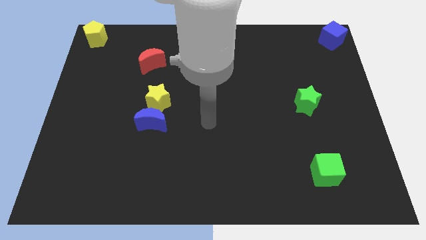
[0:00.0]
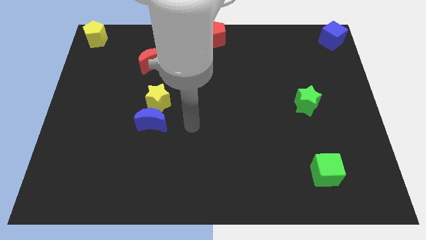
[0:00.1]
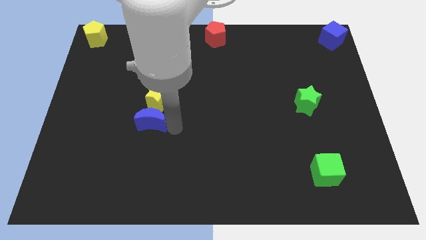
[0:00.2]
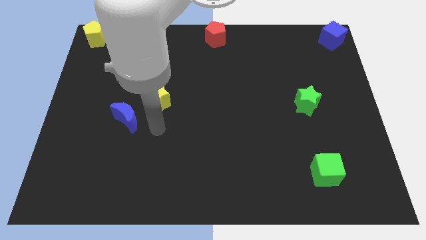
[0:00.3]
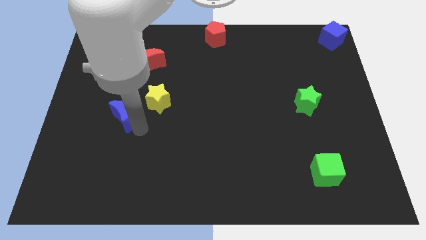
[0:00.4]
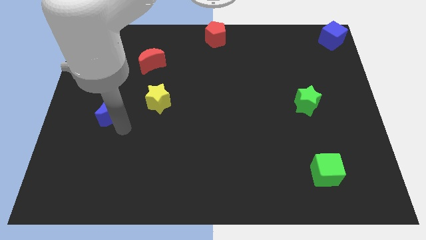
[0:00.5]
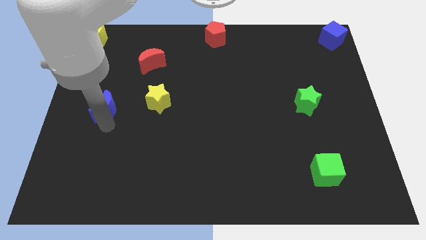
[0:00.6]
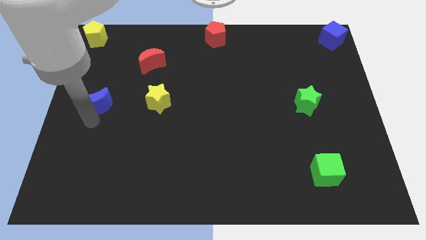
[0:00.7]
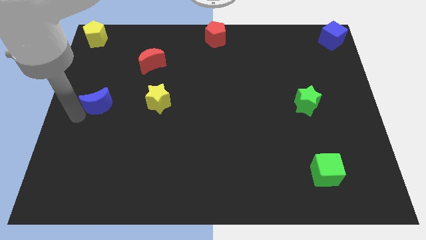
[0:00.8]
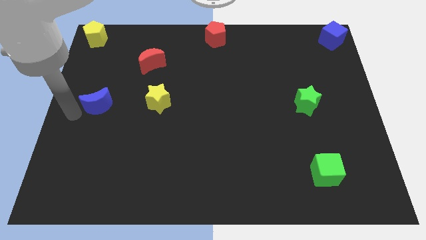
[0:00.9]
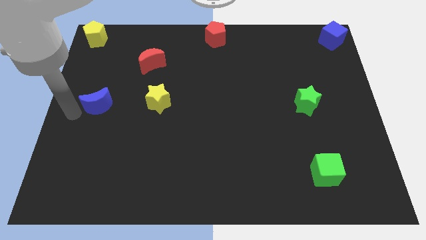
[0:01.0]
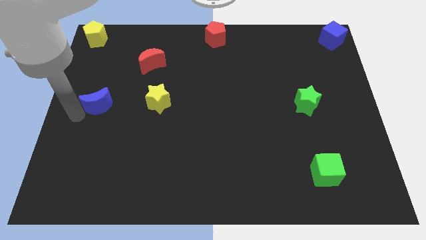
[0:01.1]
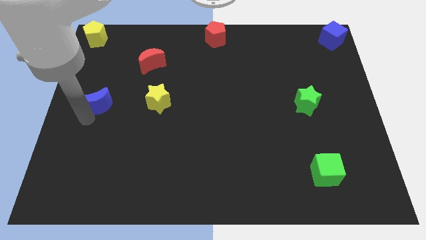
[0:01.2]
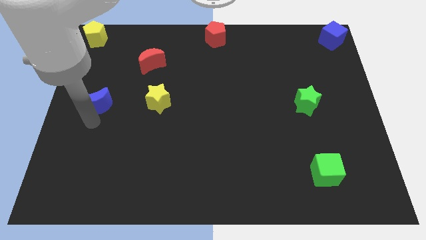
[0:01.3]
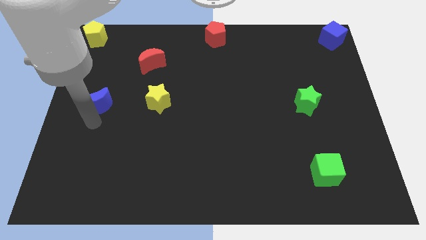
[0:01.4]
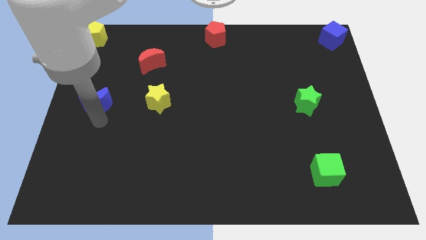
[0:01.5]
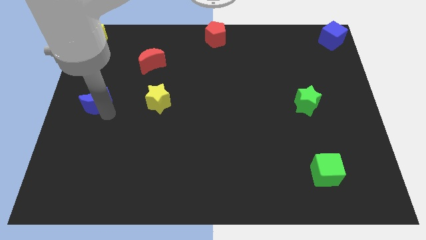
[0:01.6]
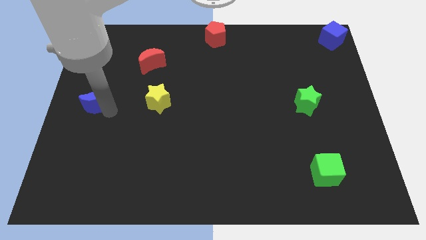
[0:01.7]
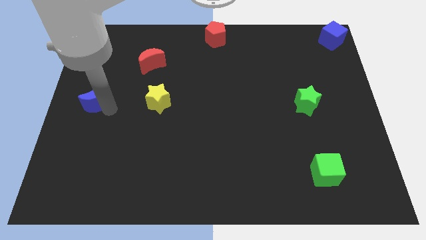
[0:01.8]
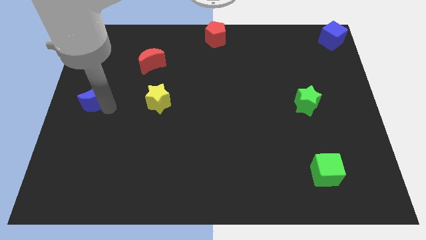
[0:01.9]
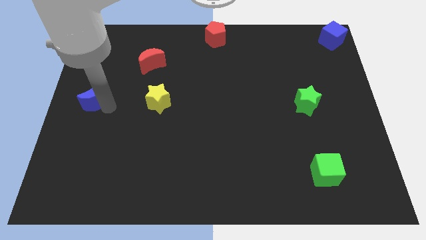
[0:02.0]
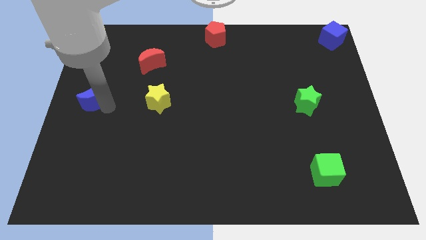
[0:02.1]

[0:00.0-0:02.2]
push the blue crescent to the left of the yellow star

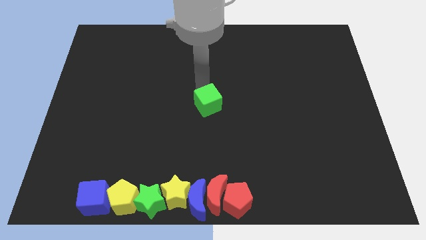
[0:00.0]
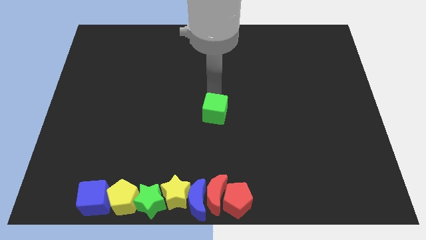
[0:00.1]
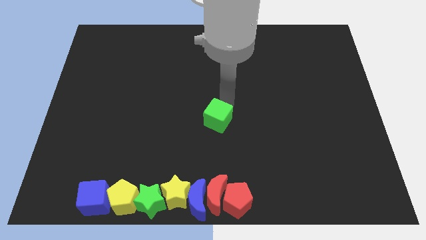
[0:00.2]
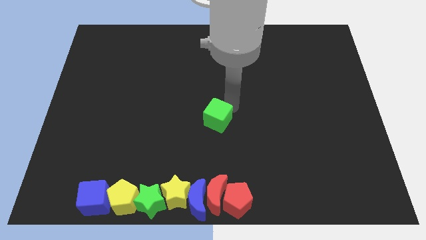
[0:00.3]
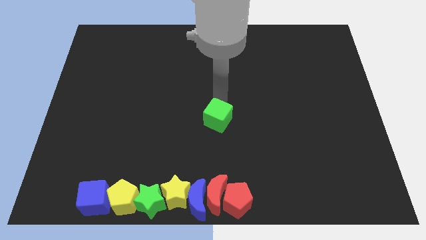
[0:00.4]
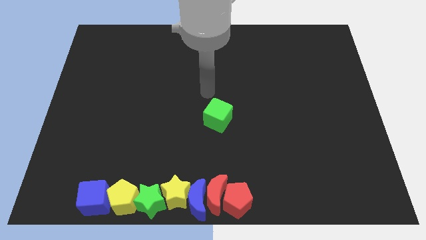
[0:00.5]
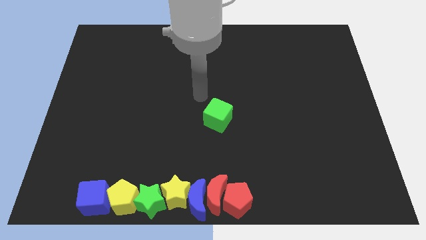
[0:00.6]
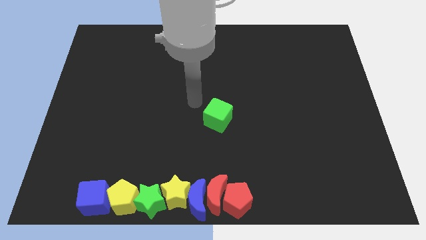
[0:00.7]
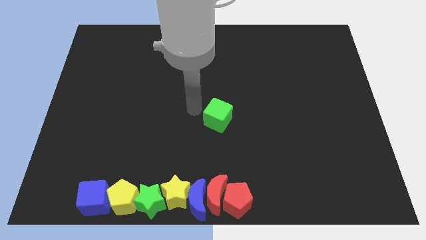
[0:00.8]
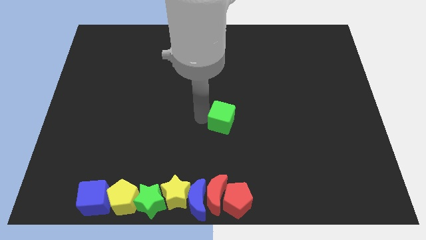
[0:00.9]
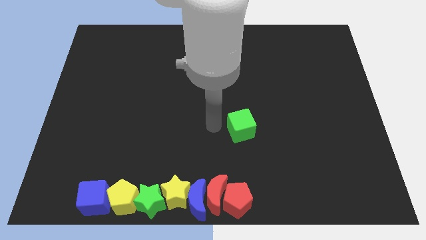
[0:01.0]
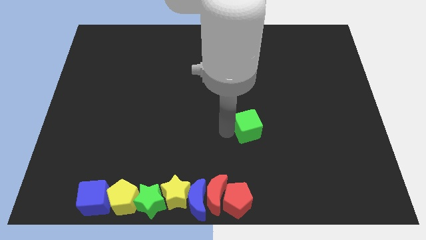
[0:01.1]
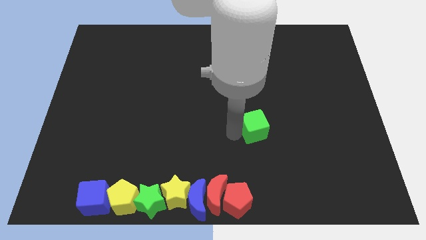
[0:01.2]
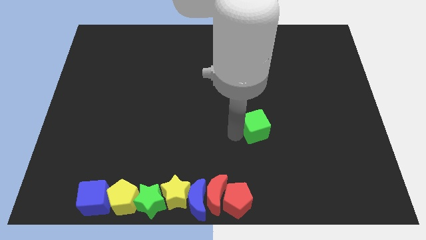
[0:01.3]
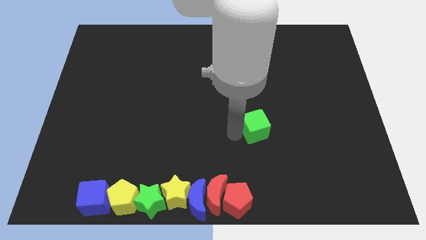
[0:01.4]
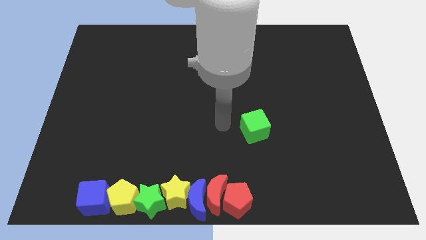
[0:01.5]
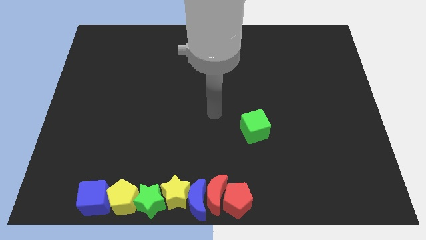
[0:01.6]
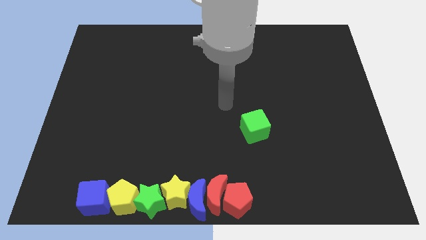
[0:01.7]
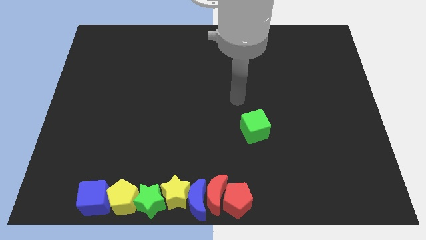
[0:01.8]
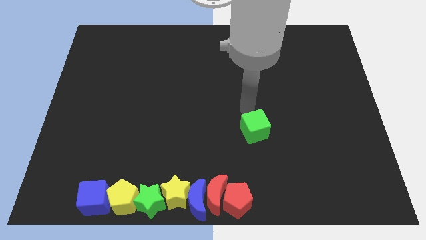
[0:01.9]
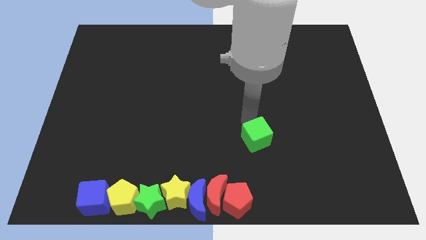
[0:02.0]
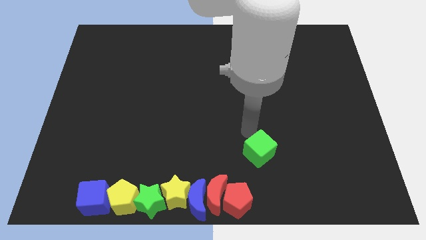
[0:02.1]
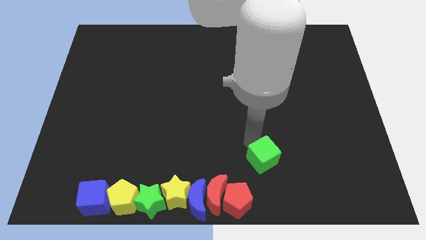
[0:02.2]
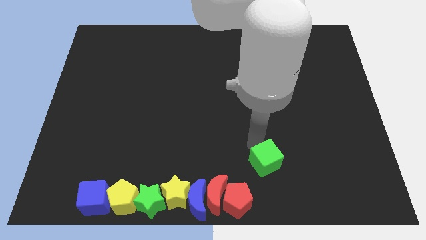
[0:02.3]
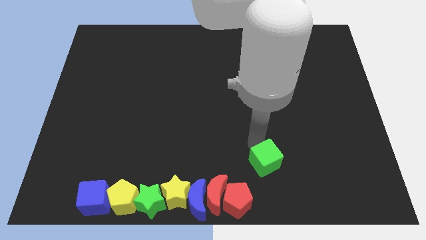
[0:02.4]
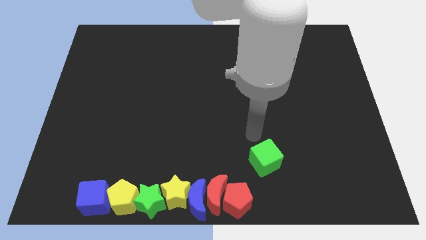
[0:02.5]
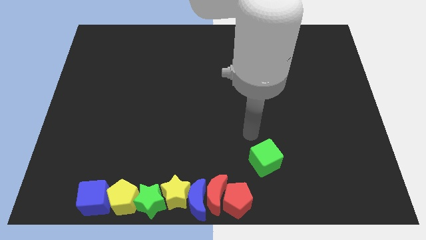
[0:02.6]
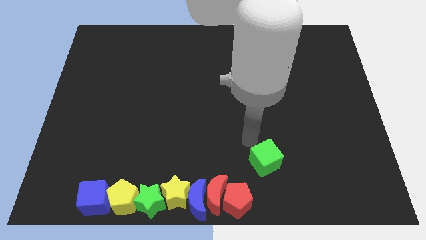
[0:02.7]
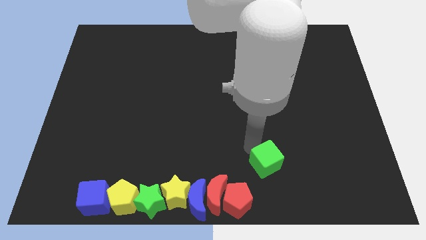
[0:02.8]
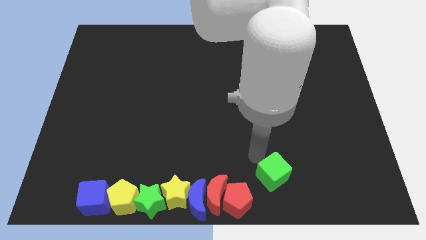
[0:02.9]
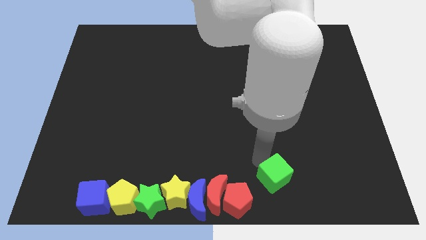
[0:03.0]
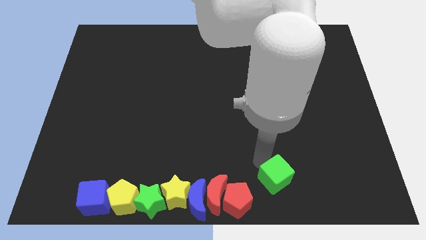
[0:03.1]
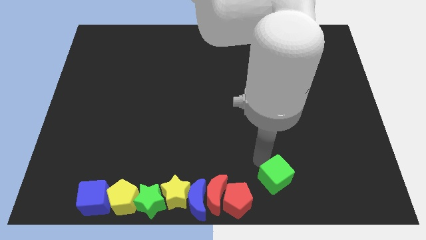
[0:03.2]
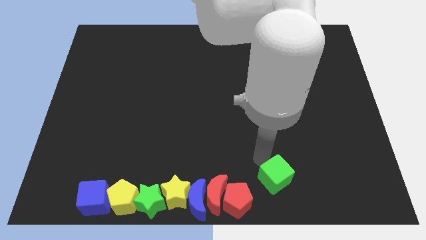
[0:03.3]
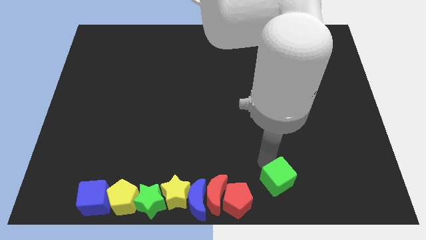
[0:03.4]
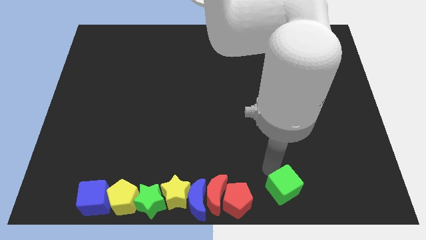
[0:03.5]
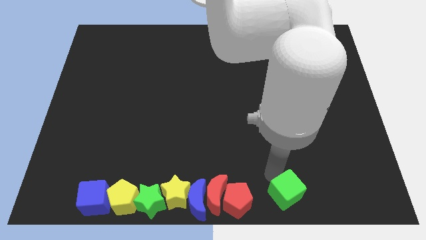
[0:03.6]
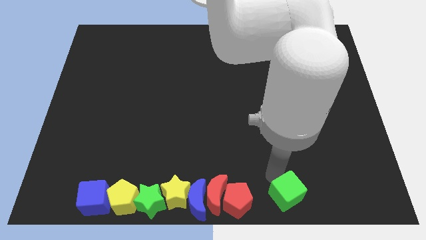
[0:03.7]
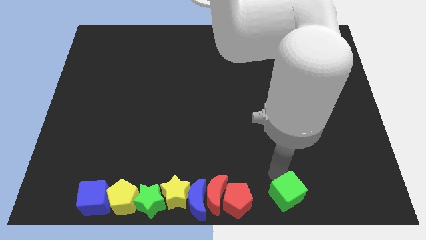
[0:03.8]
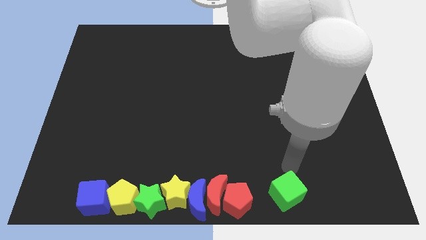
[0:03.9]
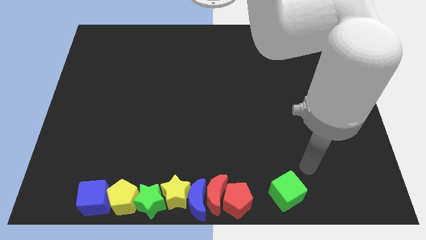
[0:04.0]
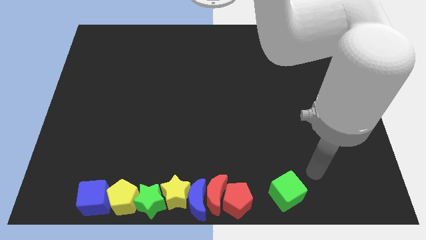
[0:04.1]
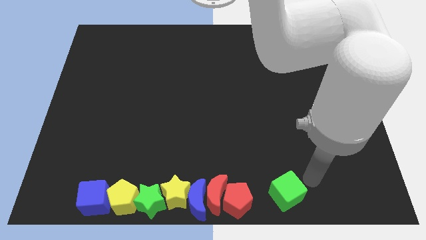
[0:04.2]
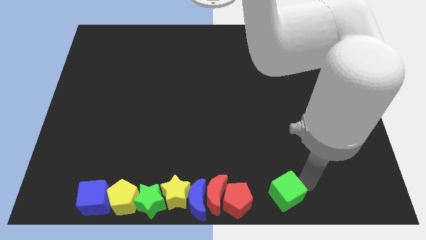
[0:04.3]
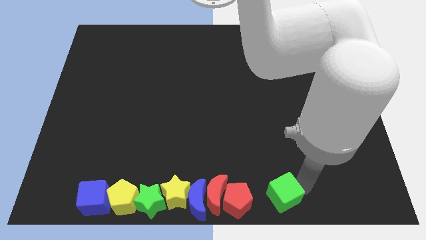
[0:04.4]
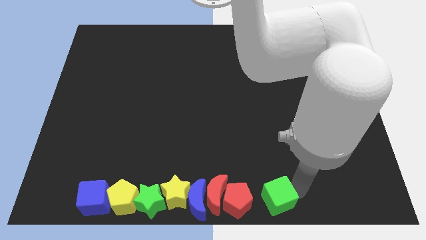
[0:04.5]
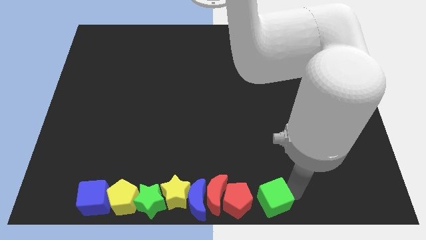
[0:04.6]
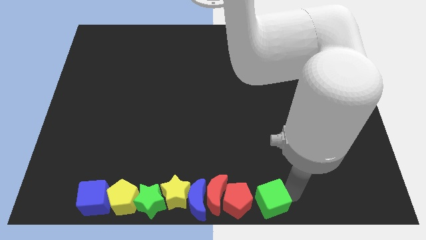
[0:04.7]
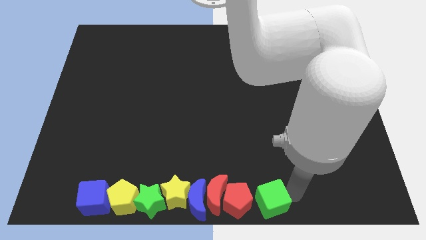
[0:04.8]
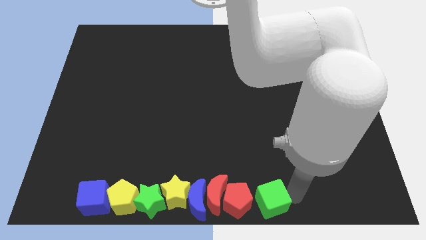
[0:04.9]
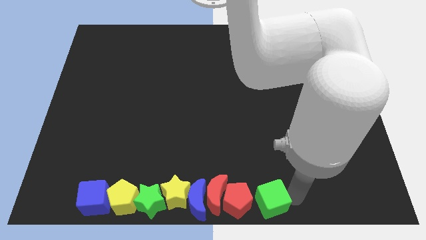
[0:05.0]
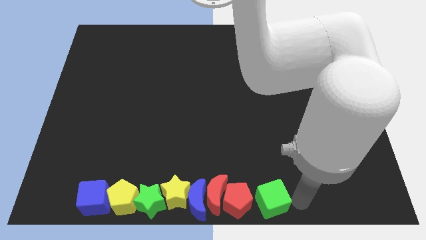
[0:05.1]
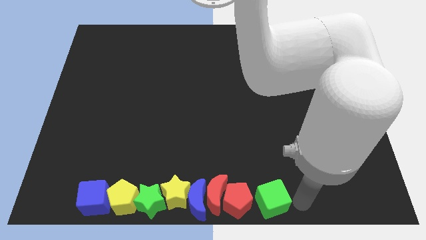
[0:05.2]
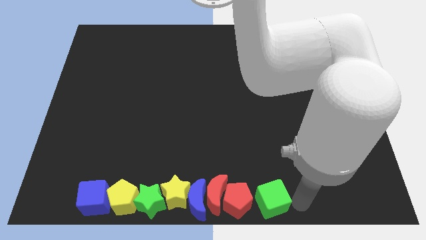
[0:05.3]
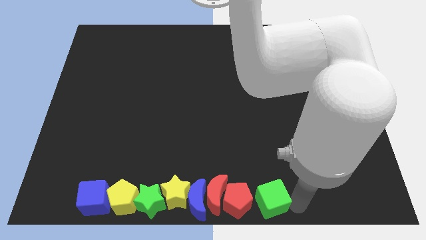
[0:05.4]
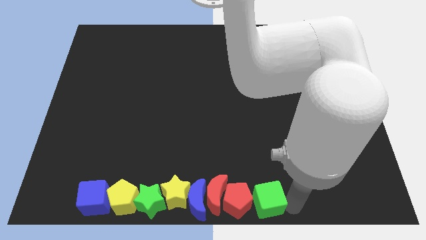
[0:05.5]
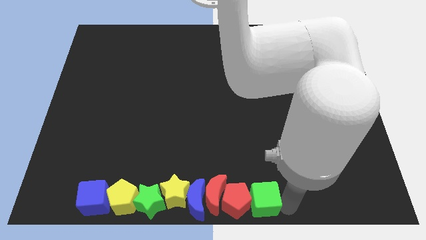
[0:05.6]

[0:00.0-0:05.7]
push the green cube into the red pentagon

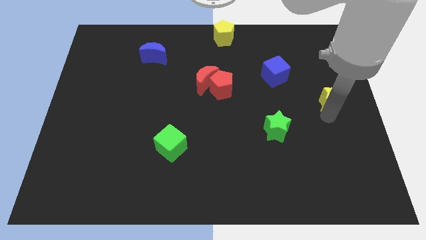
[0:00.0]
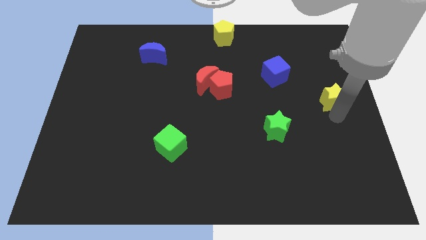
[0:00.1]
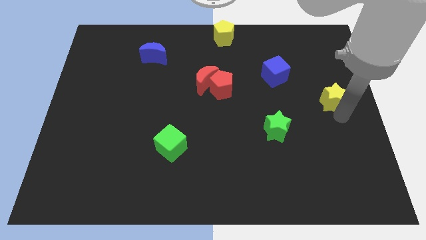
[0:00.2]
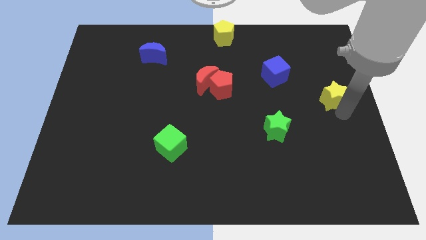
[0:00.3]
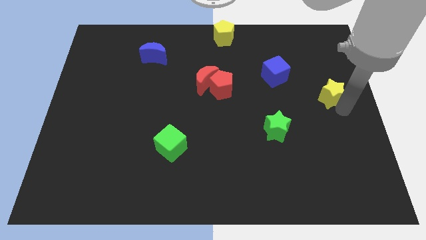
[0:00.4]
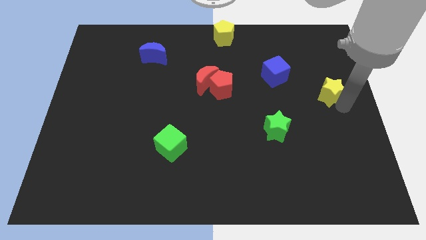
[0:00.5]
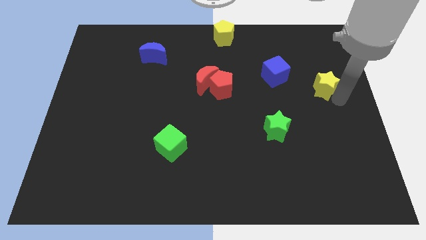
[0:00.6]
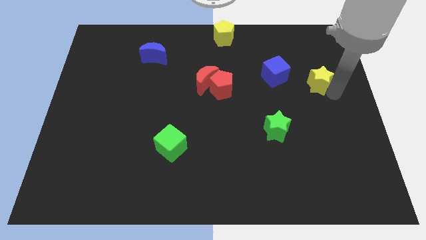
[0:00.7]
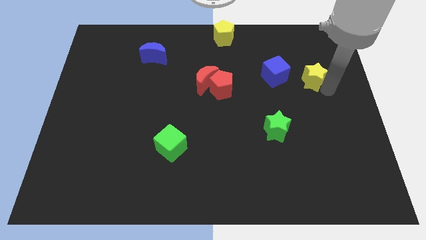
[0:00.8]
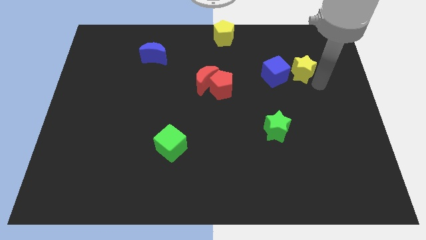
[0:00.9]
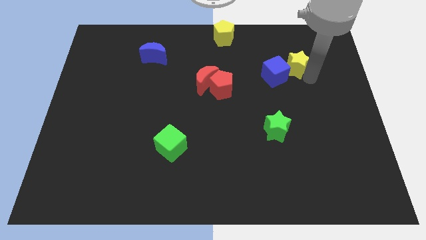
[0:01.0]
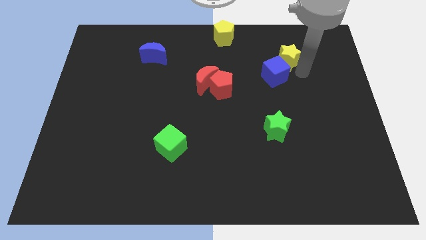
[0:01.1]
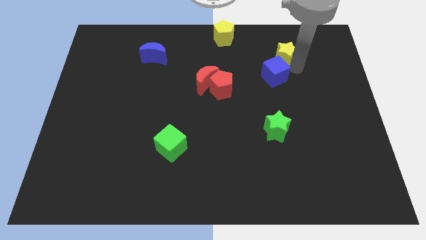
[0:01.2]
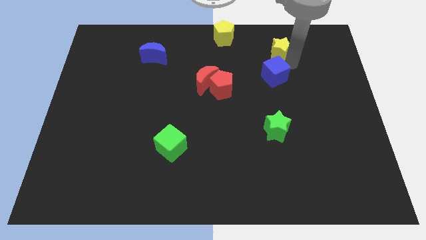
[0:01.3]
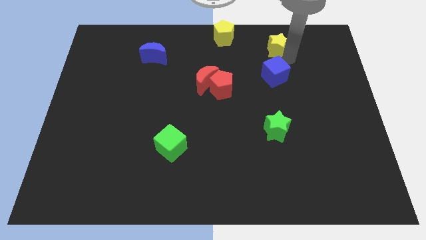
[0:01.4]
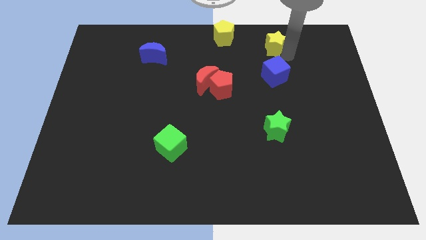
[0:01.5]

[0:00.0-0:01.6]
put the yellow star above the blue cube
